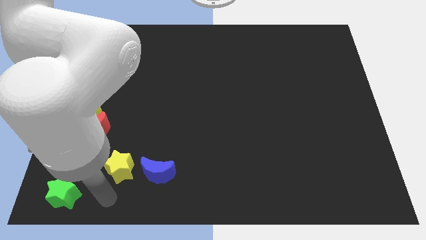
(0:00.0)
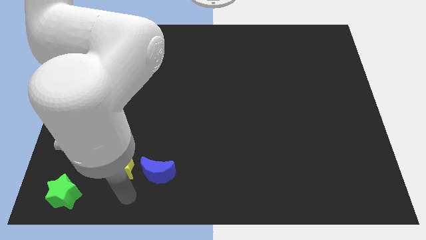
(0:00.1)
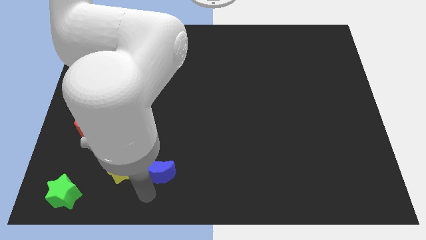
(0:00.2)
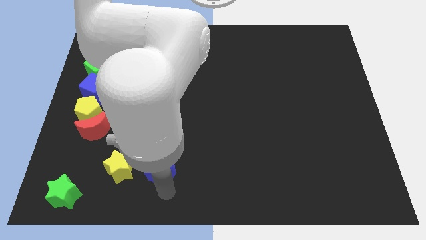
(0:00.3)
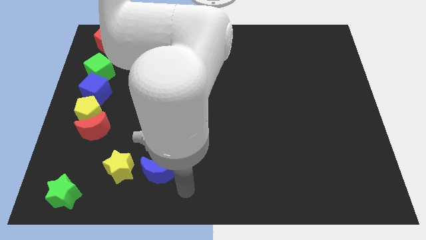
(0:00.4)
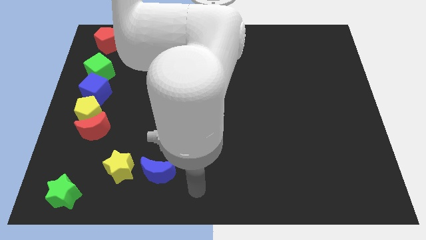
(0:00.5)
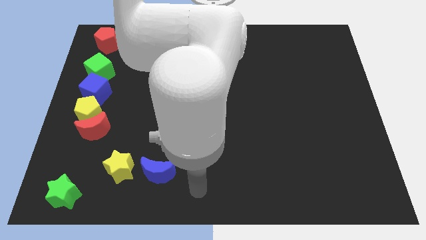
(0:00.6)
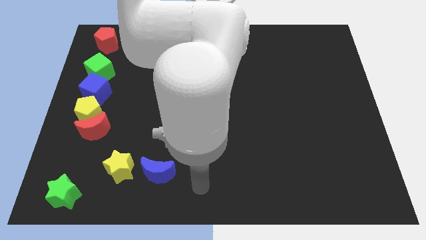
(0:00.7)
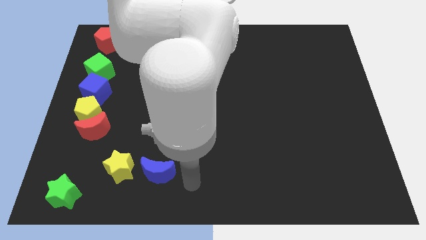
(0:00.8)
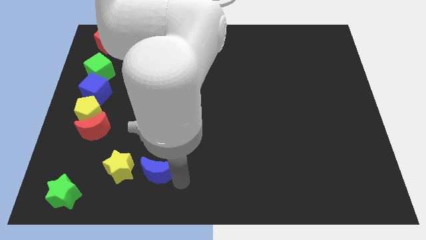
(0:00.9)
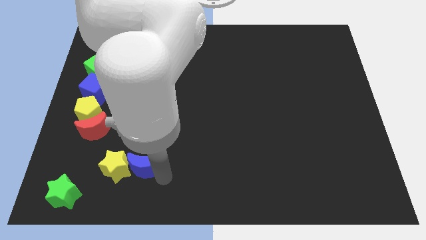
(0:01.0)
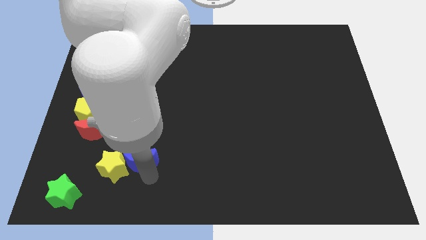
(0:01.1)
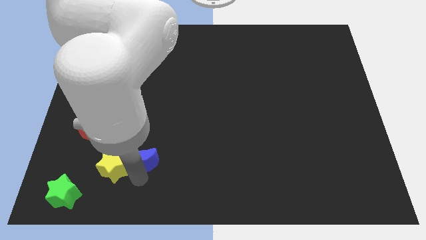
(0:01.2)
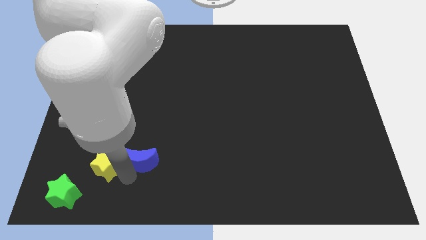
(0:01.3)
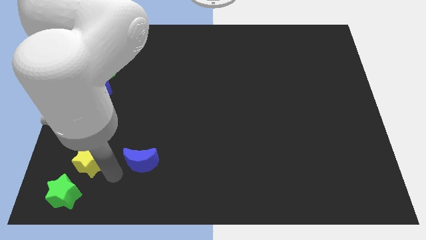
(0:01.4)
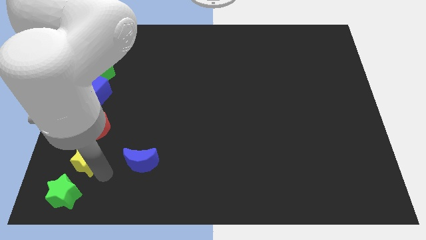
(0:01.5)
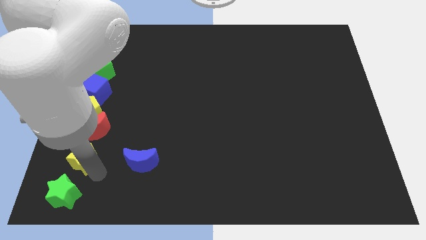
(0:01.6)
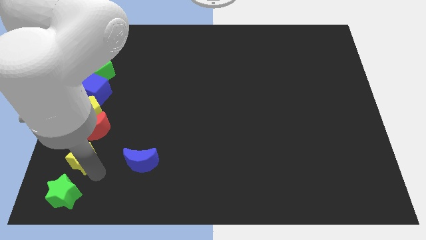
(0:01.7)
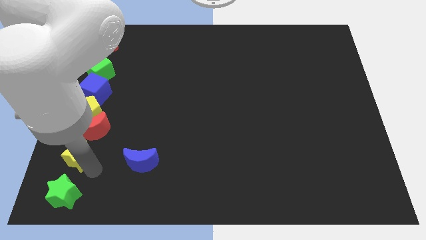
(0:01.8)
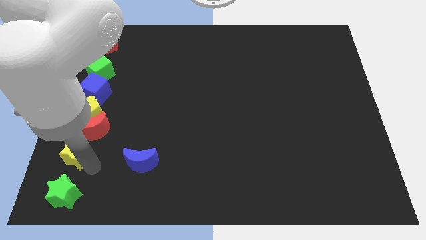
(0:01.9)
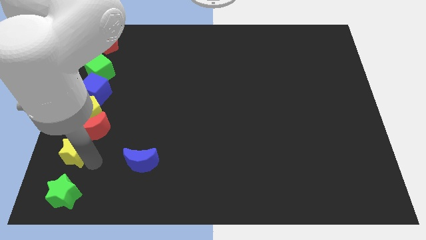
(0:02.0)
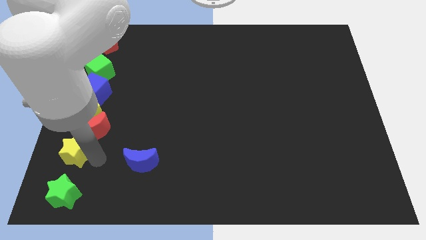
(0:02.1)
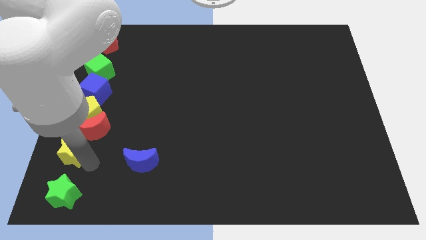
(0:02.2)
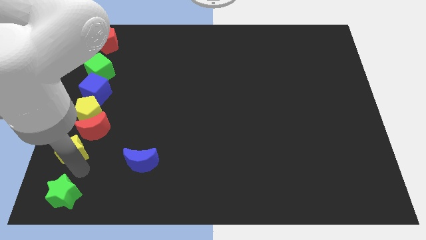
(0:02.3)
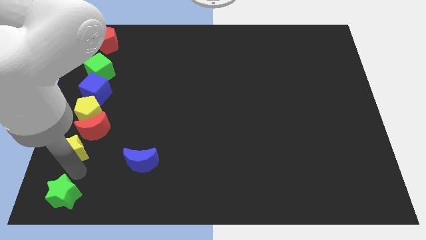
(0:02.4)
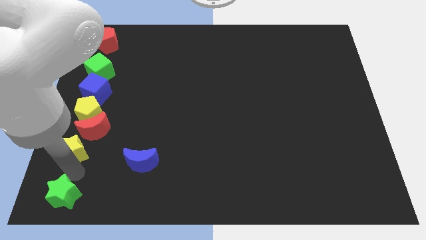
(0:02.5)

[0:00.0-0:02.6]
place the yellow star above the green star

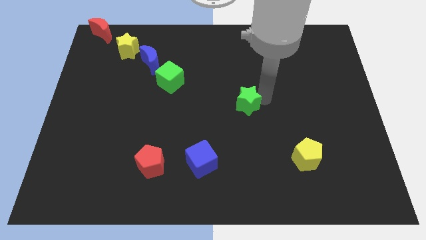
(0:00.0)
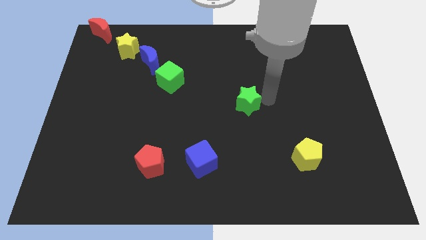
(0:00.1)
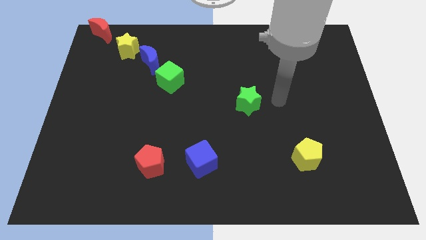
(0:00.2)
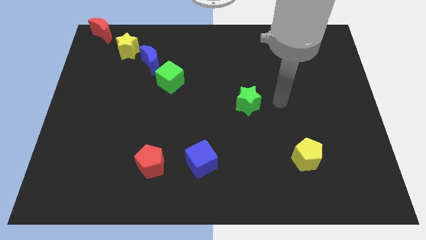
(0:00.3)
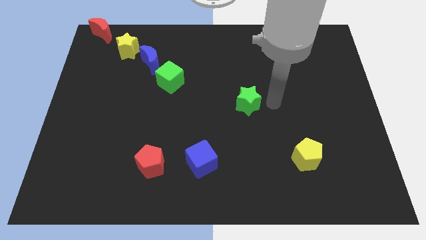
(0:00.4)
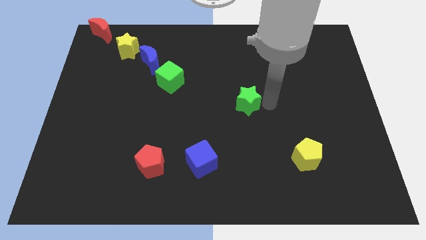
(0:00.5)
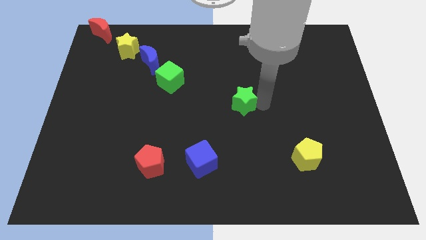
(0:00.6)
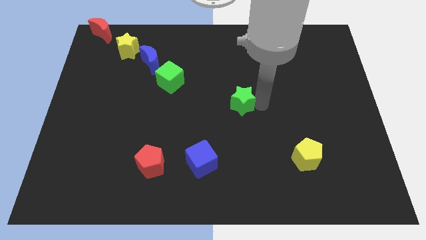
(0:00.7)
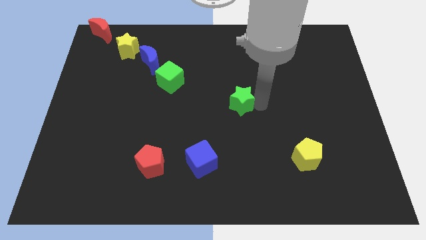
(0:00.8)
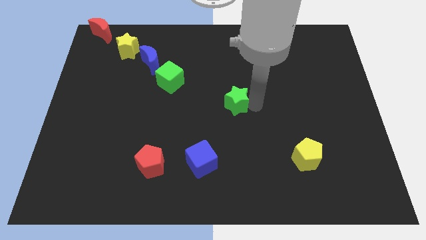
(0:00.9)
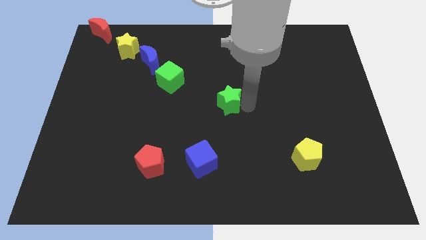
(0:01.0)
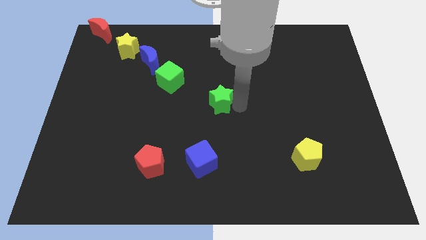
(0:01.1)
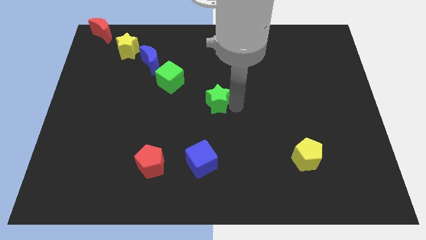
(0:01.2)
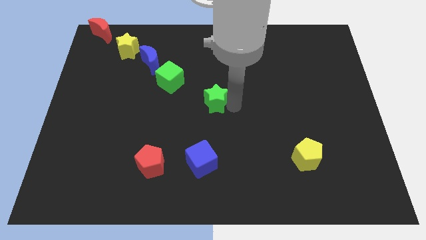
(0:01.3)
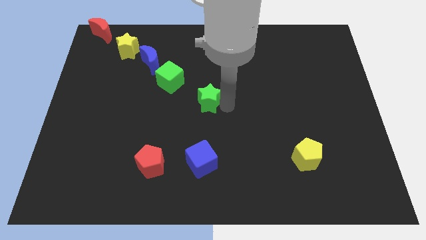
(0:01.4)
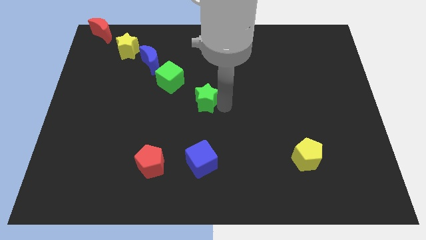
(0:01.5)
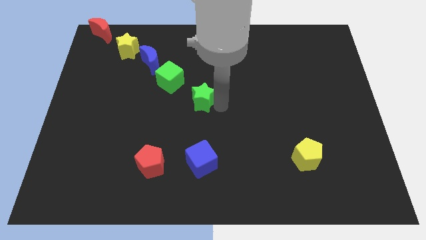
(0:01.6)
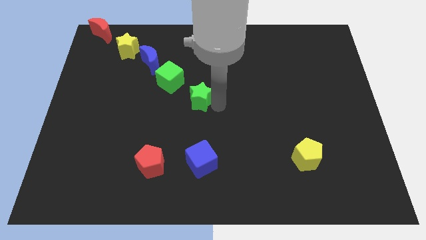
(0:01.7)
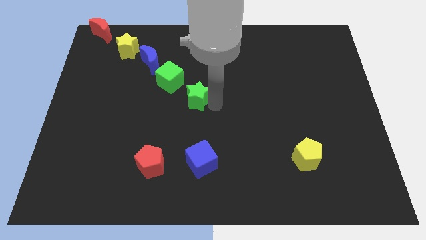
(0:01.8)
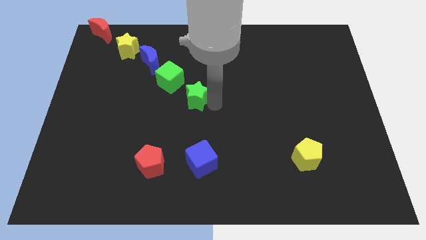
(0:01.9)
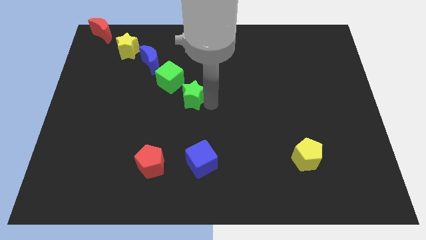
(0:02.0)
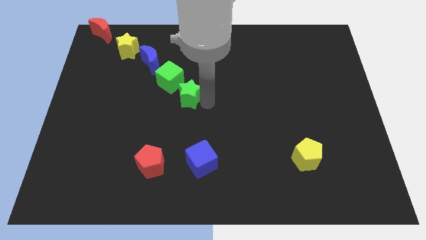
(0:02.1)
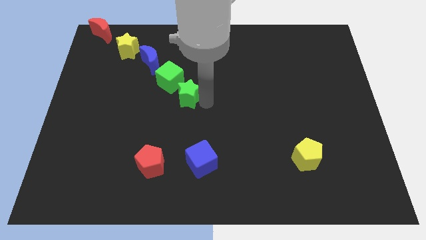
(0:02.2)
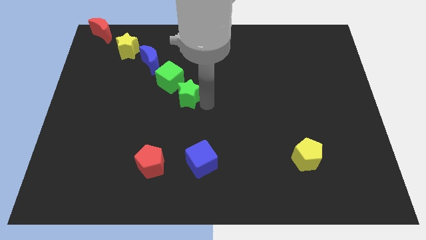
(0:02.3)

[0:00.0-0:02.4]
place green star below green cube

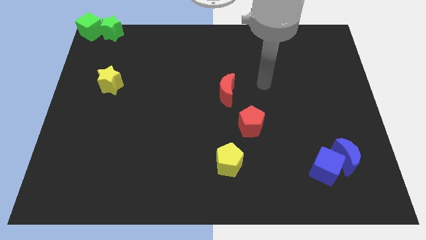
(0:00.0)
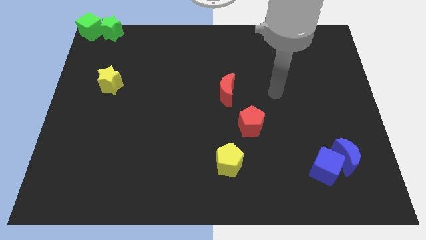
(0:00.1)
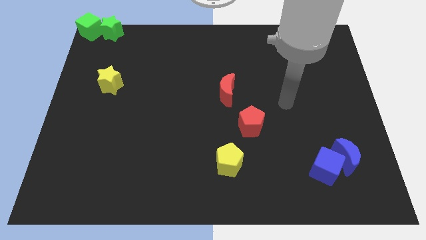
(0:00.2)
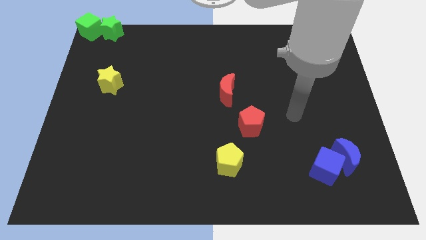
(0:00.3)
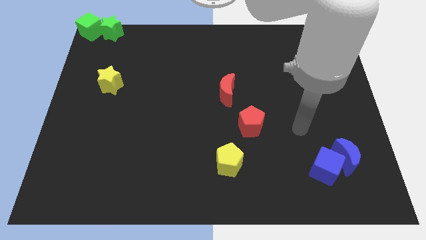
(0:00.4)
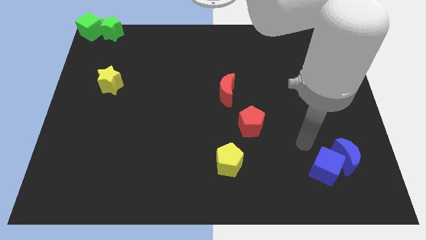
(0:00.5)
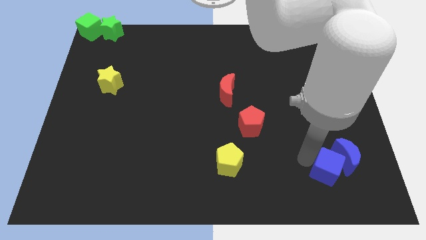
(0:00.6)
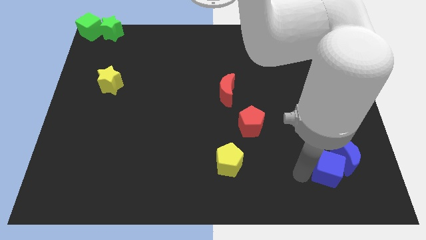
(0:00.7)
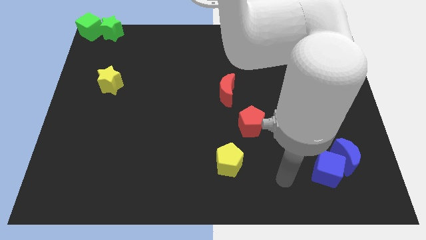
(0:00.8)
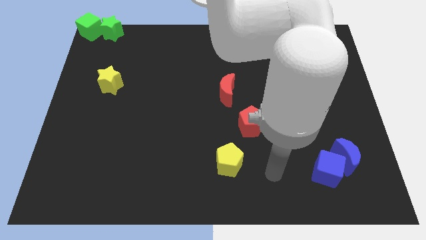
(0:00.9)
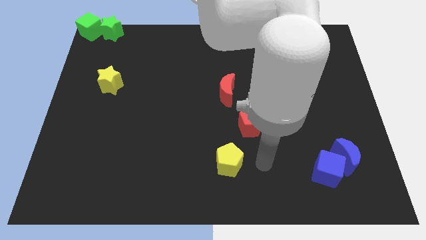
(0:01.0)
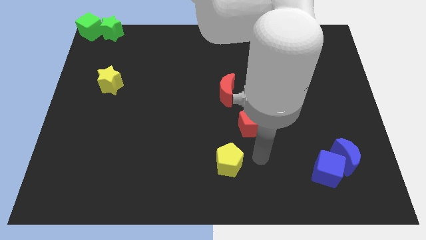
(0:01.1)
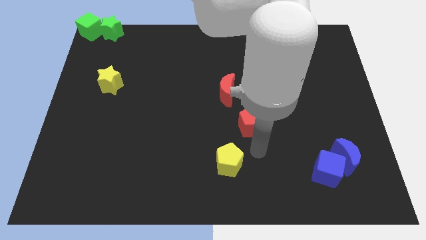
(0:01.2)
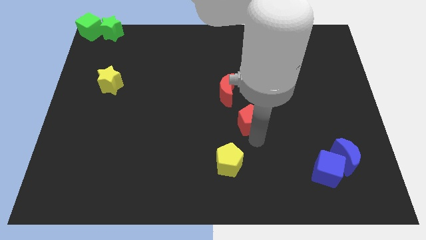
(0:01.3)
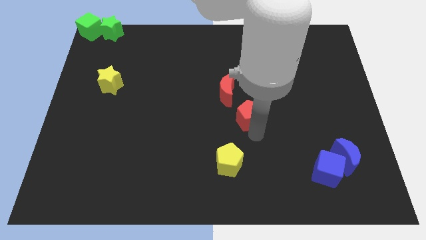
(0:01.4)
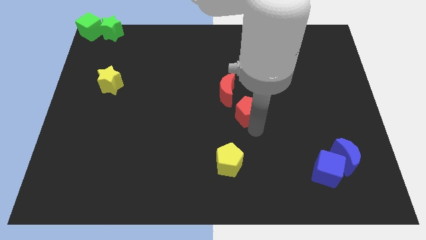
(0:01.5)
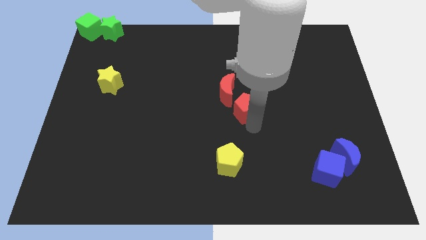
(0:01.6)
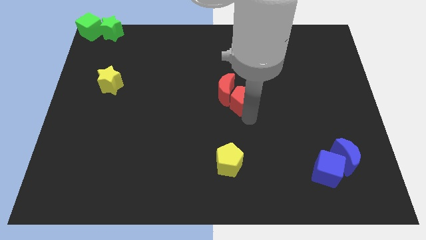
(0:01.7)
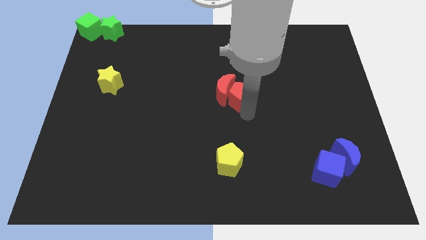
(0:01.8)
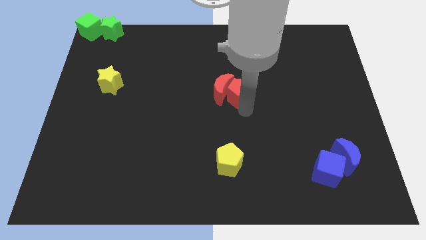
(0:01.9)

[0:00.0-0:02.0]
push red pentagon beside red crescent

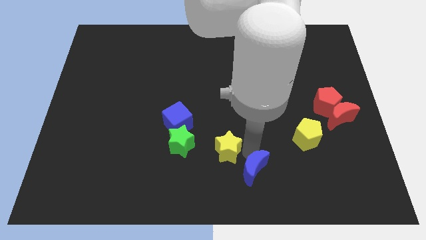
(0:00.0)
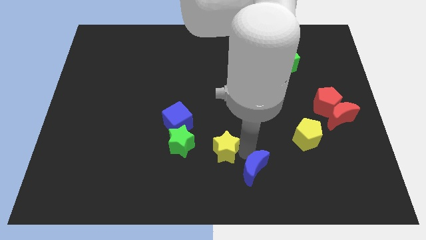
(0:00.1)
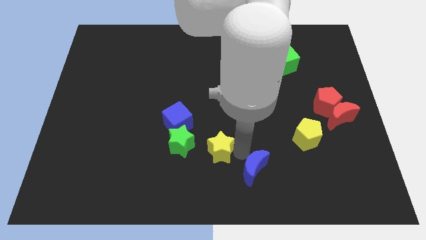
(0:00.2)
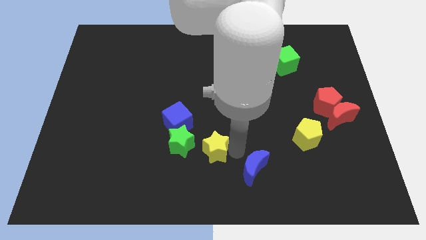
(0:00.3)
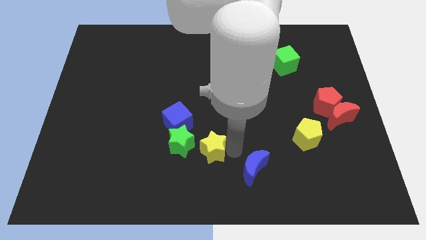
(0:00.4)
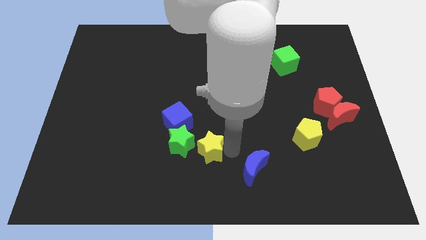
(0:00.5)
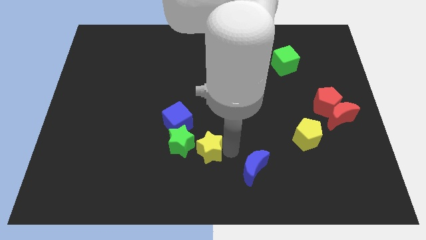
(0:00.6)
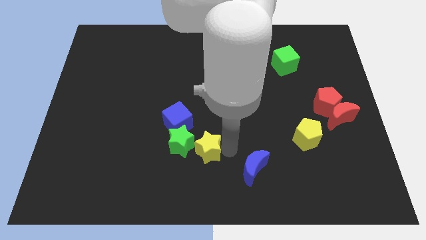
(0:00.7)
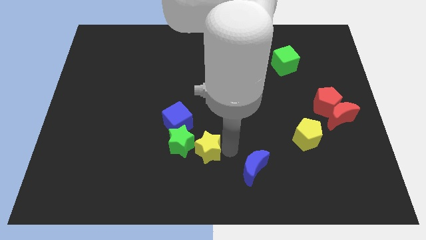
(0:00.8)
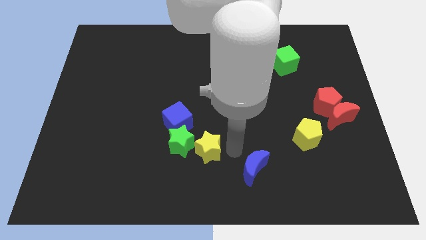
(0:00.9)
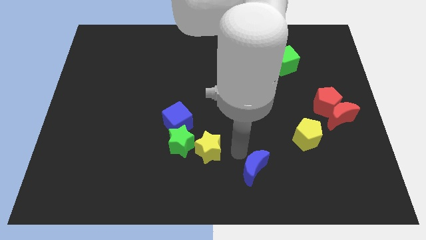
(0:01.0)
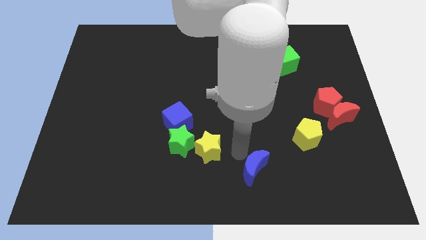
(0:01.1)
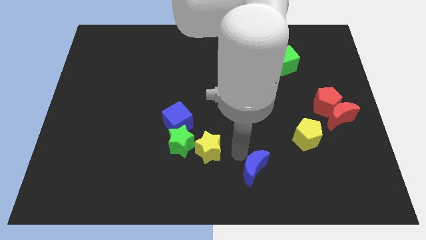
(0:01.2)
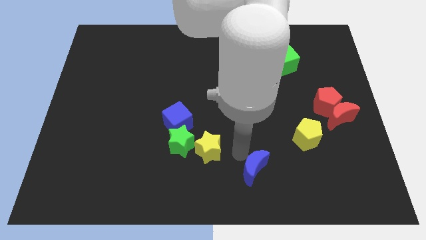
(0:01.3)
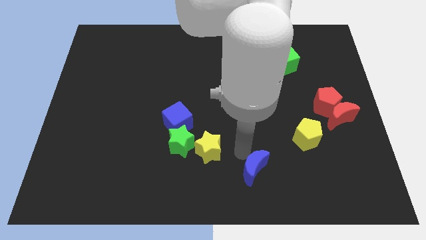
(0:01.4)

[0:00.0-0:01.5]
push yellow star into green star

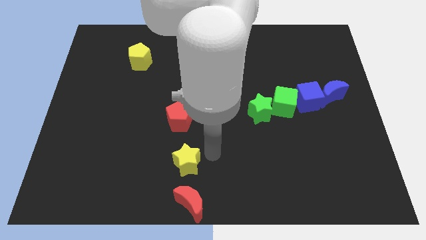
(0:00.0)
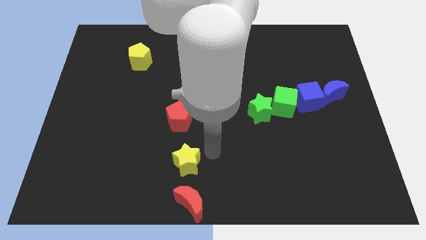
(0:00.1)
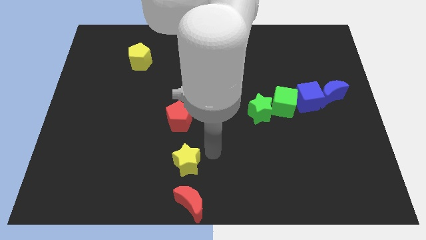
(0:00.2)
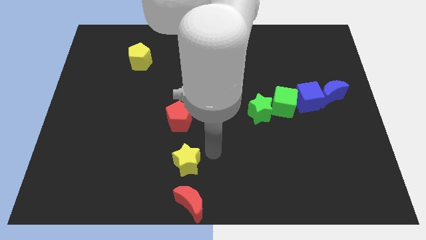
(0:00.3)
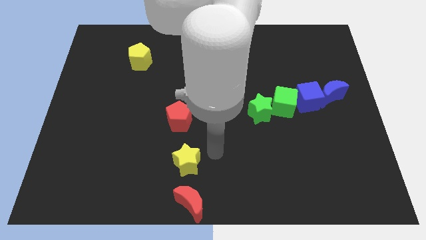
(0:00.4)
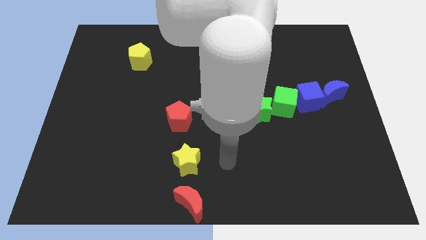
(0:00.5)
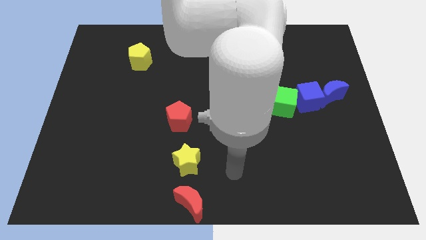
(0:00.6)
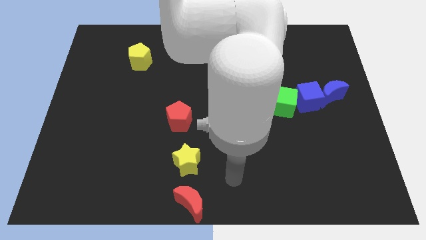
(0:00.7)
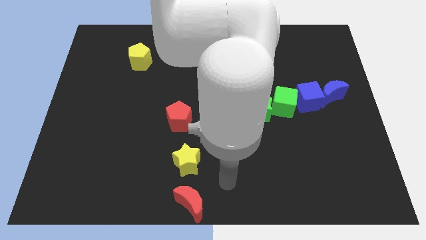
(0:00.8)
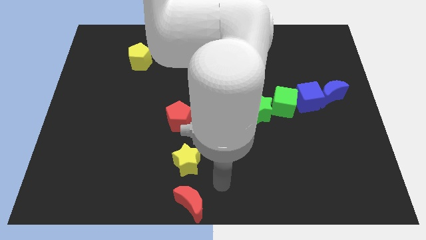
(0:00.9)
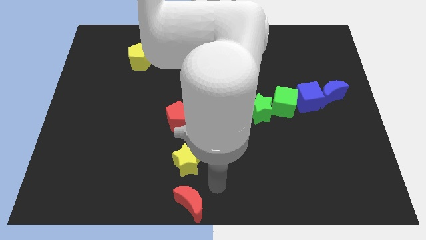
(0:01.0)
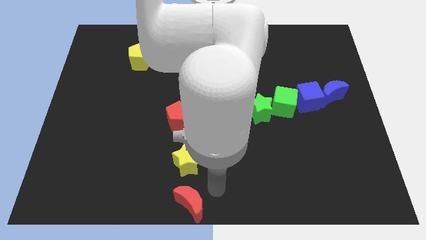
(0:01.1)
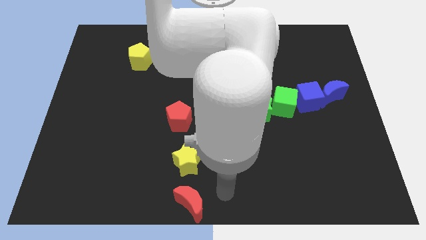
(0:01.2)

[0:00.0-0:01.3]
move your arm away from yellow star
